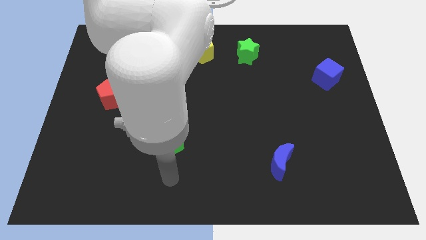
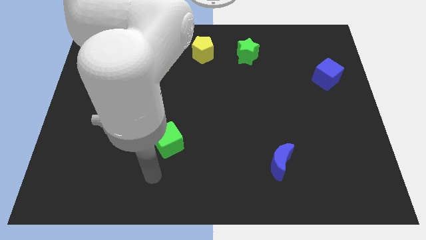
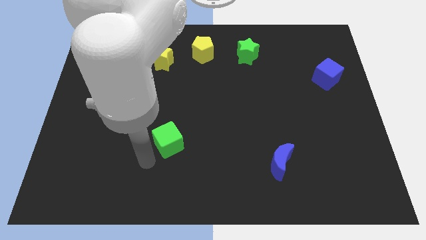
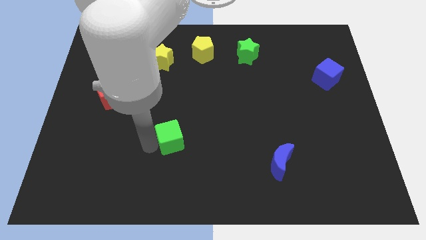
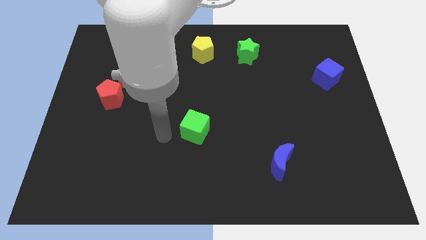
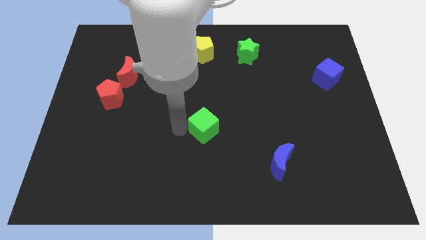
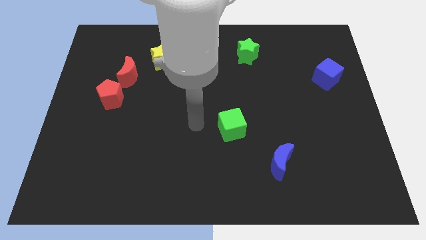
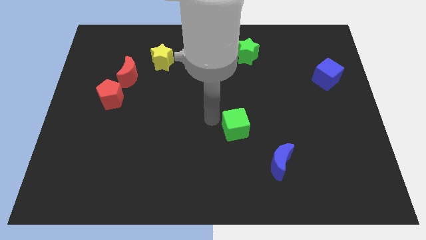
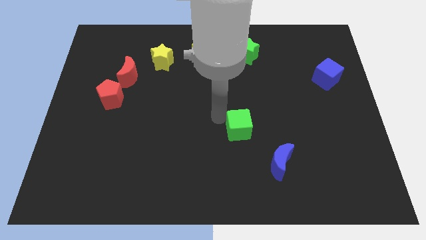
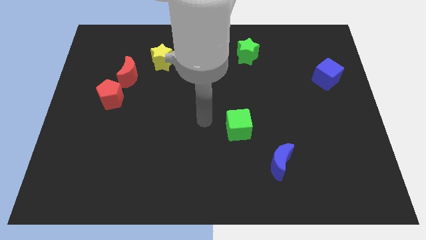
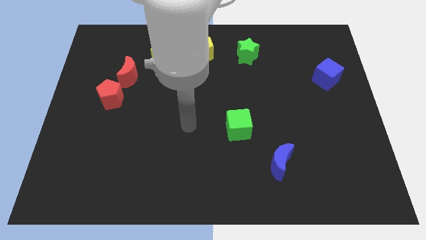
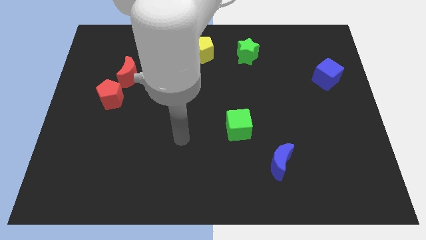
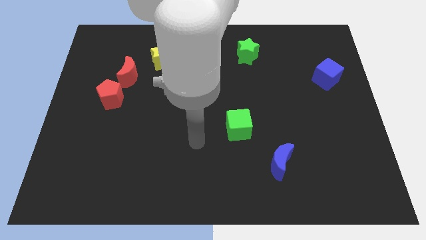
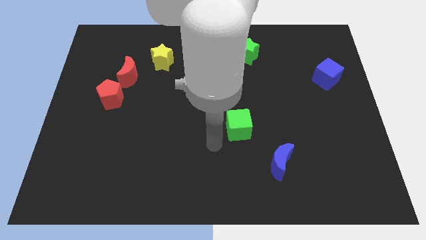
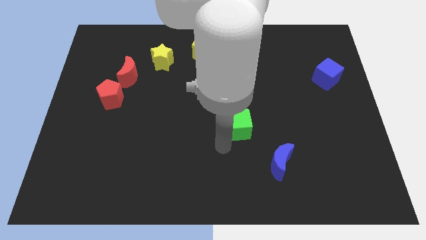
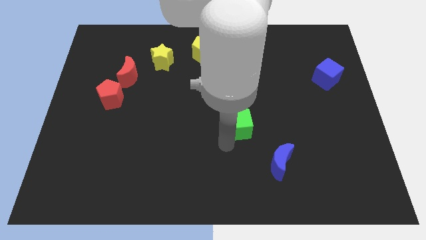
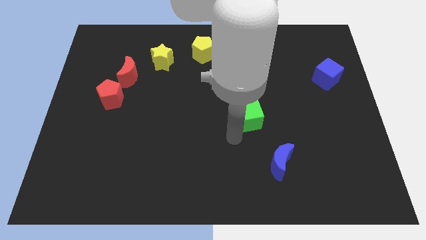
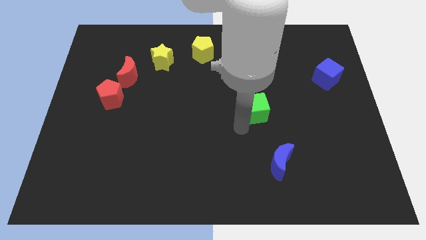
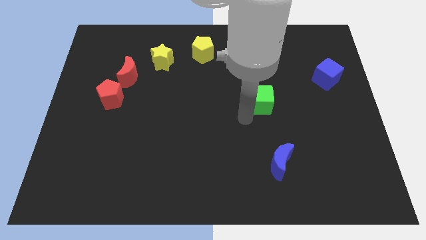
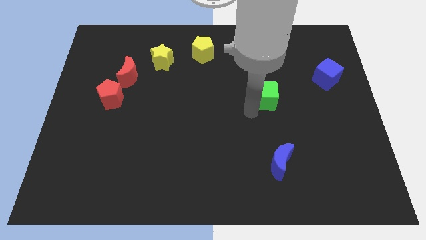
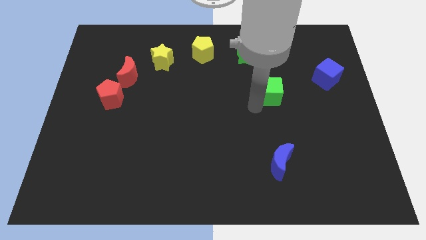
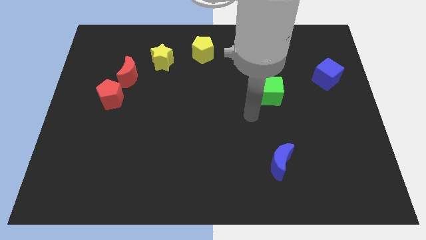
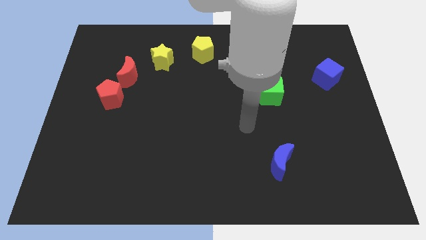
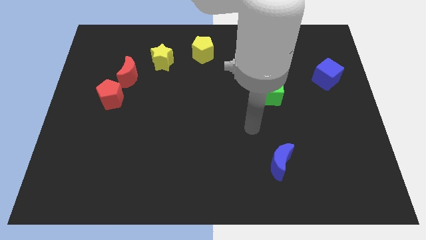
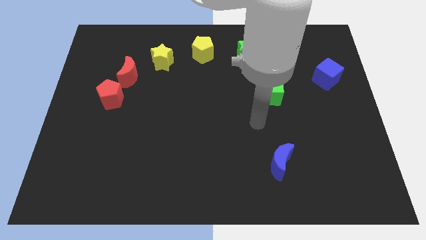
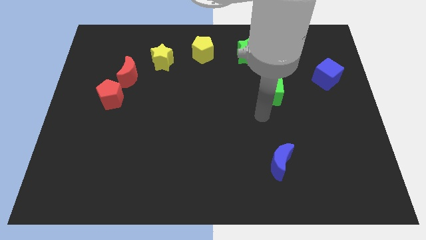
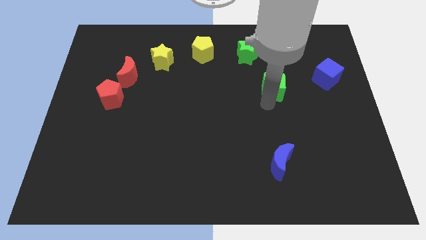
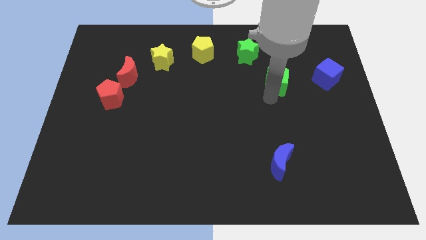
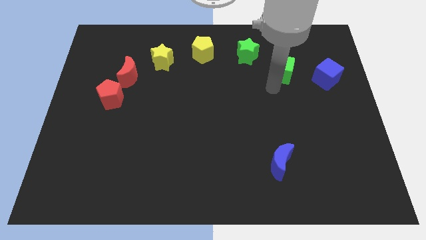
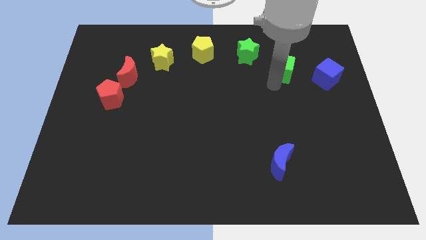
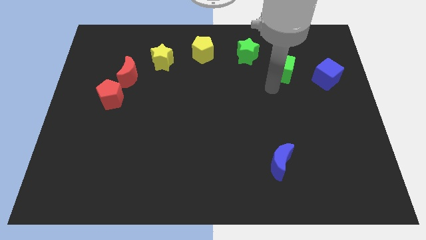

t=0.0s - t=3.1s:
place green cube to the left of blue cube

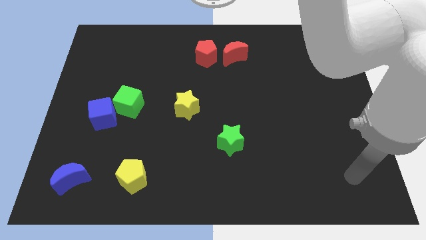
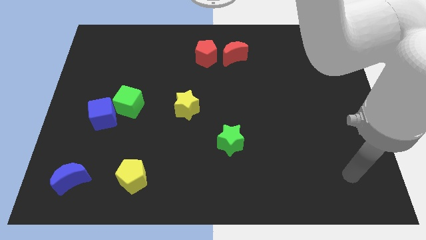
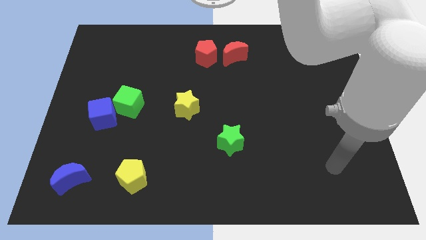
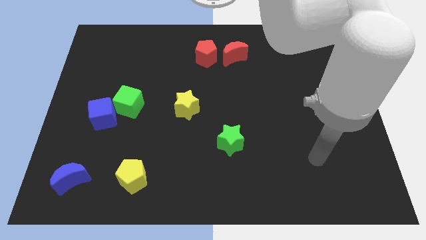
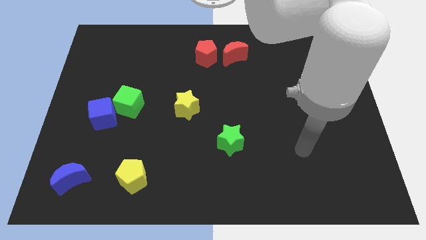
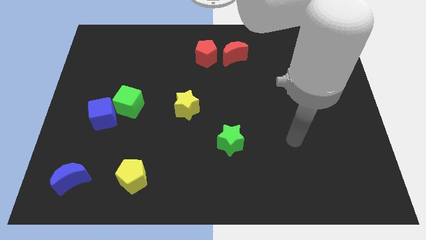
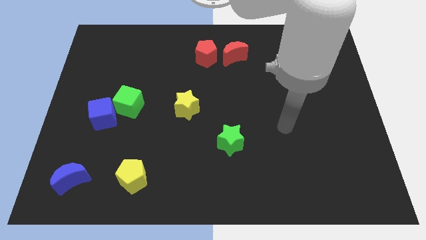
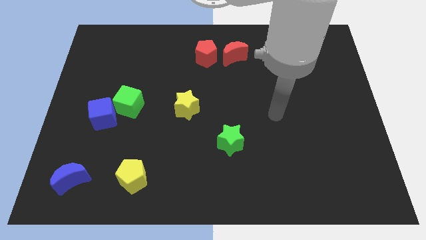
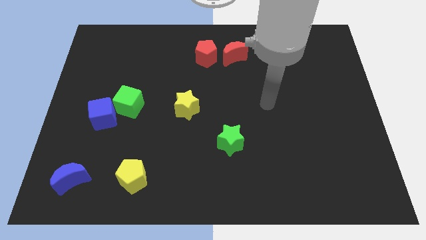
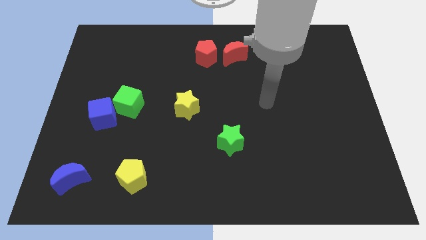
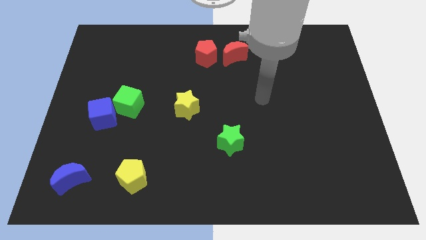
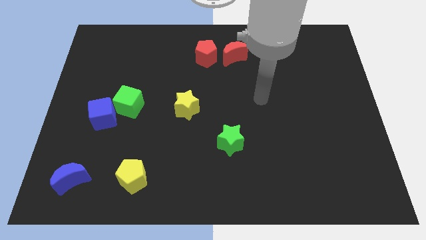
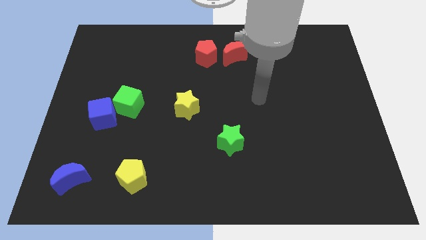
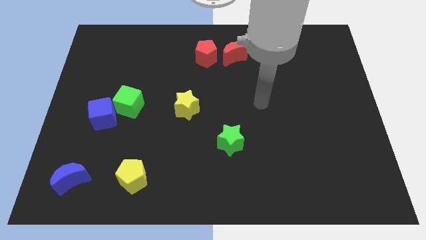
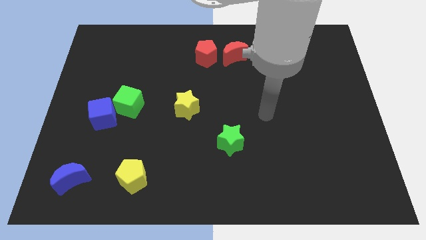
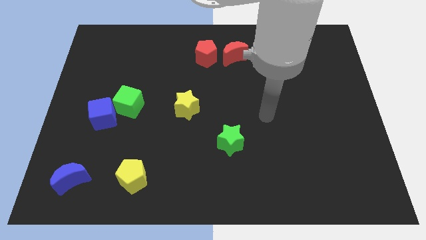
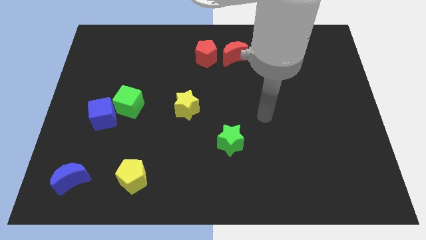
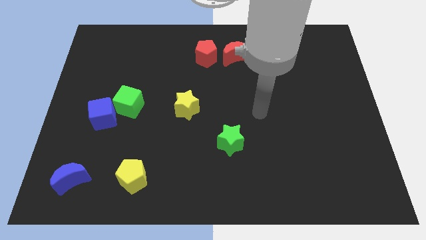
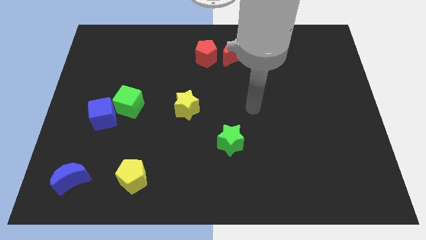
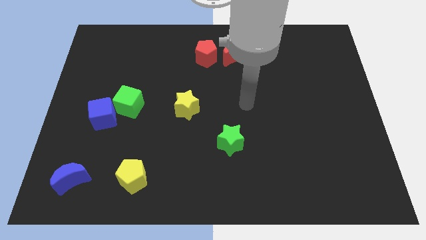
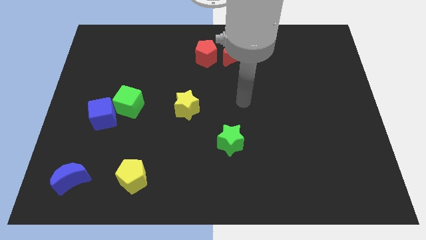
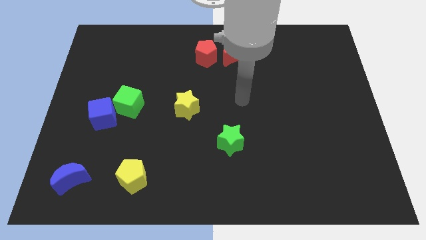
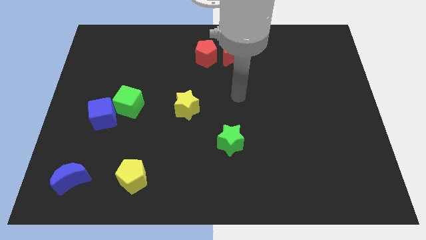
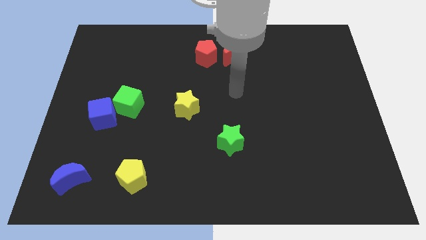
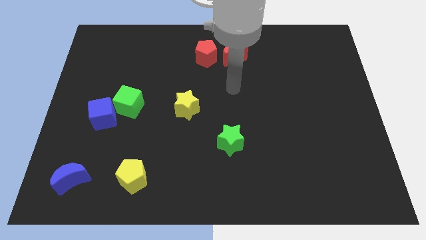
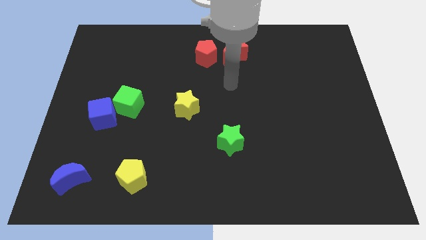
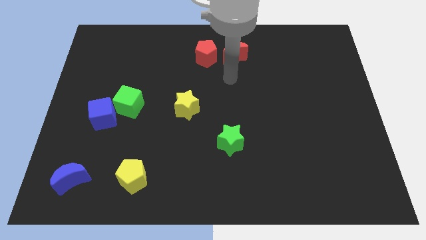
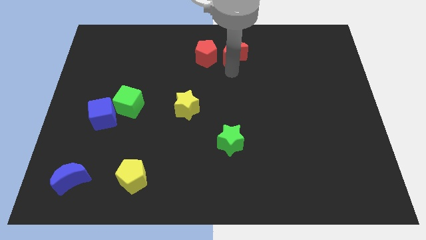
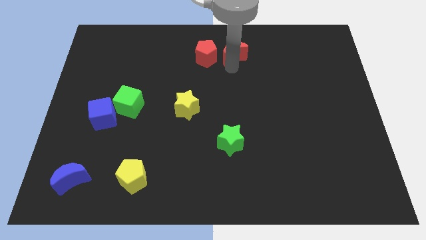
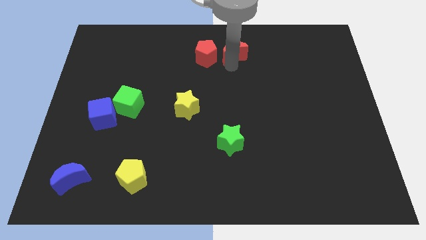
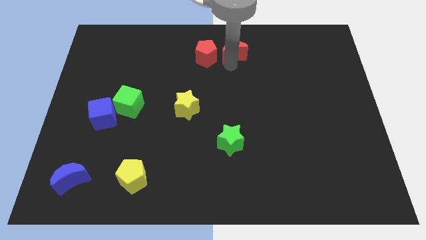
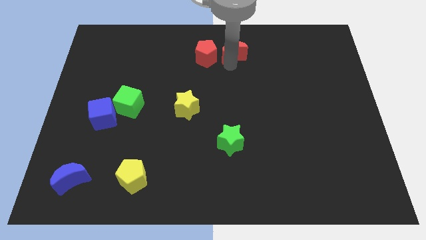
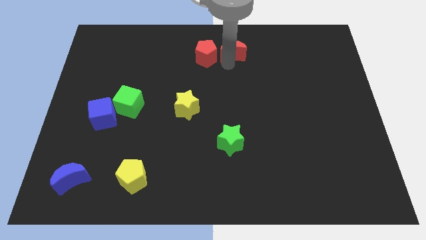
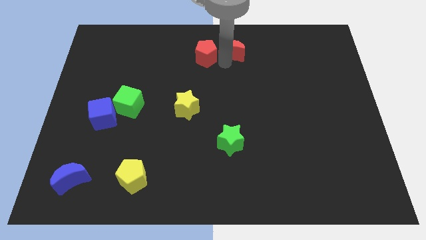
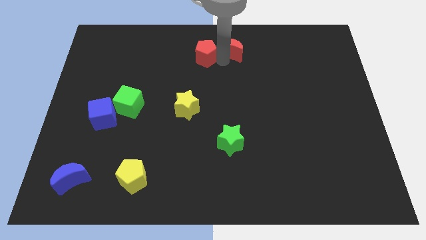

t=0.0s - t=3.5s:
move the red crescent slightly up

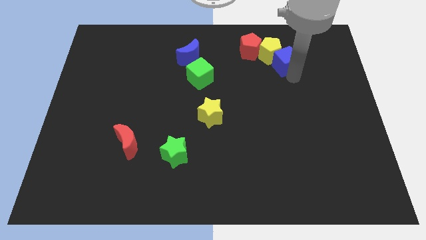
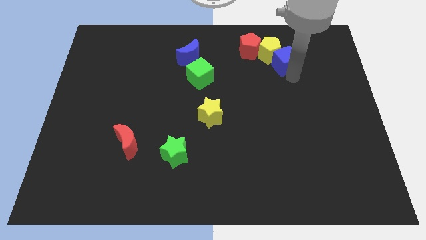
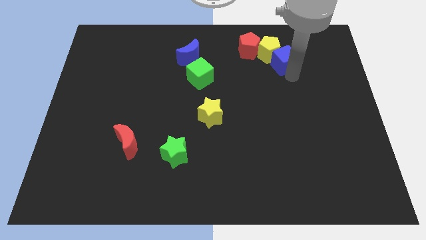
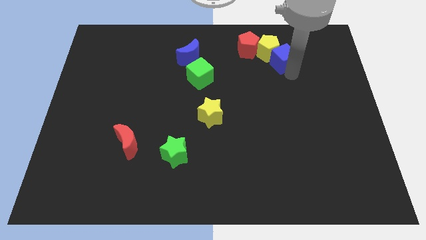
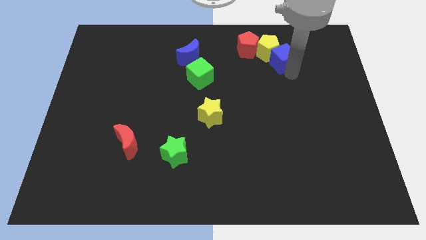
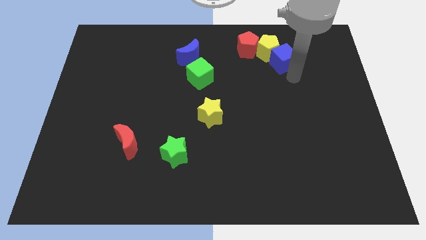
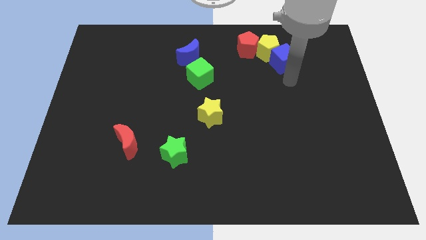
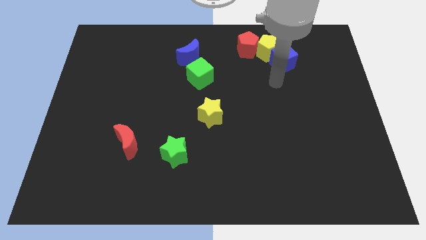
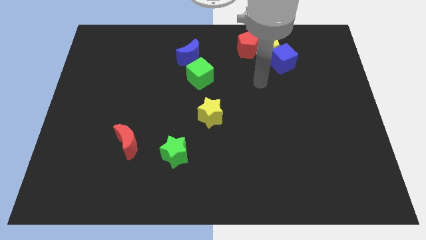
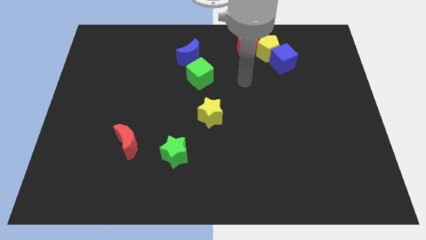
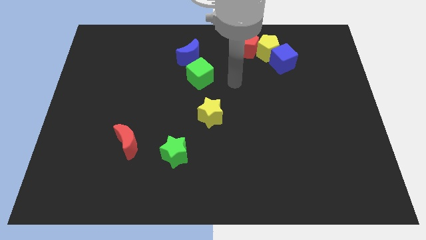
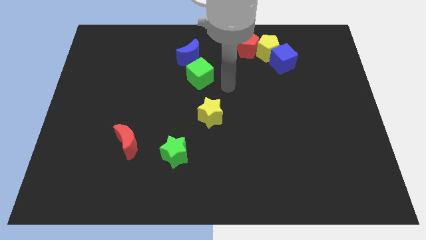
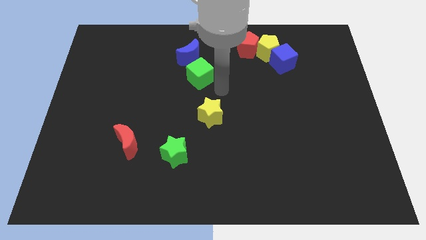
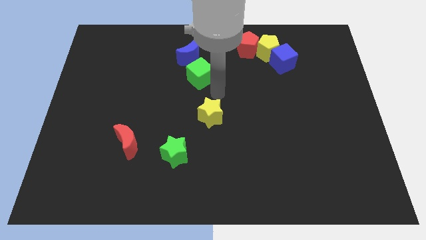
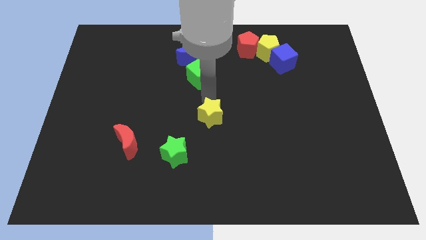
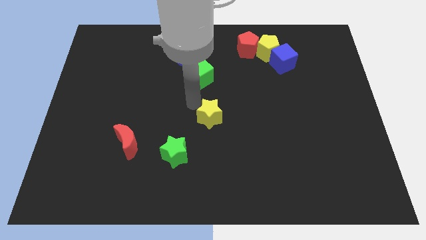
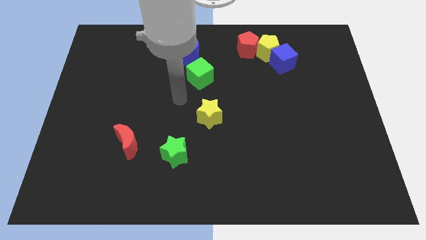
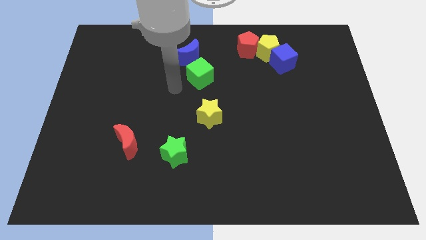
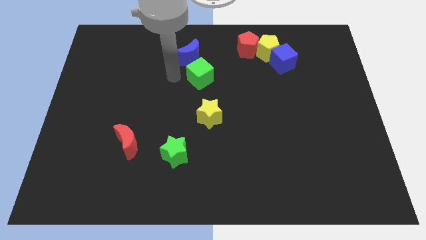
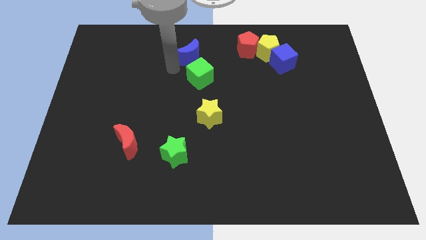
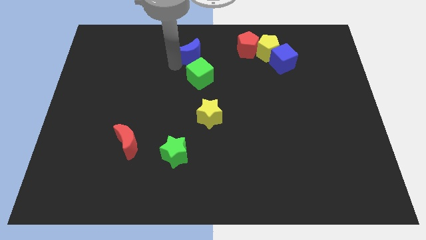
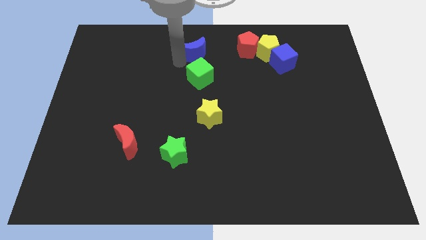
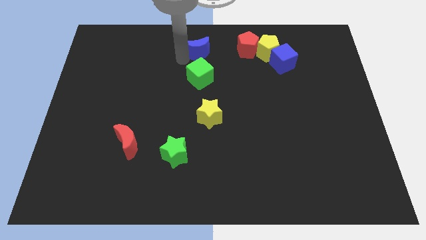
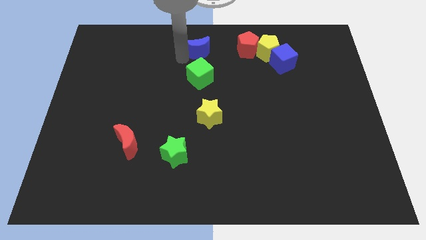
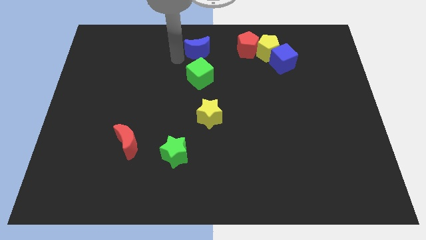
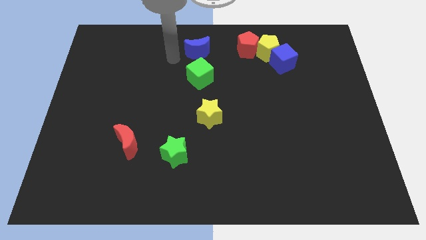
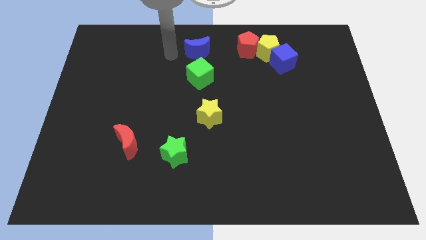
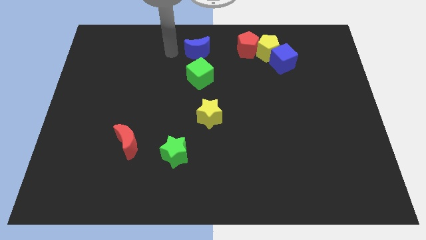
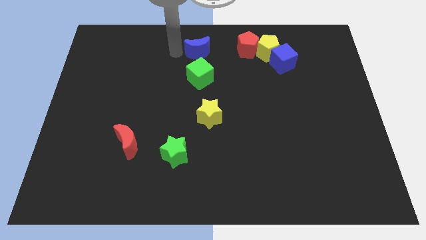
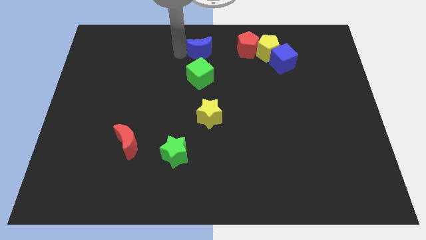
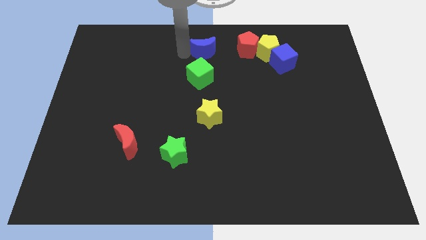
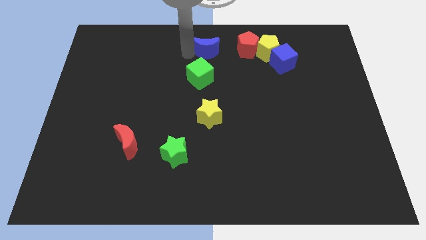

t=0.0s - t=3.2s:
place the arm to the left of the blue moon
